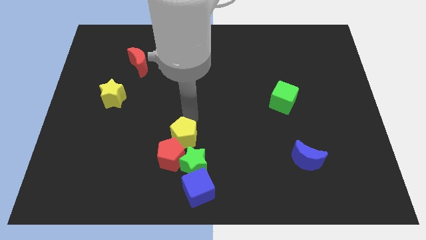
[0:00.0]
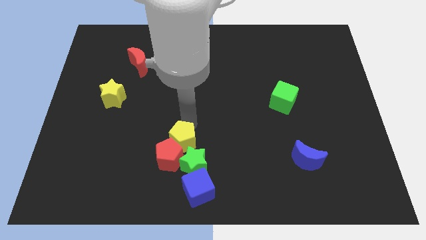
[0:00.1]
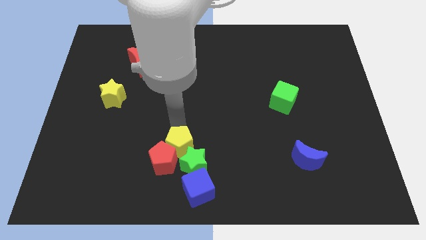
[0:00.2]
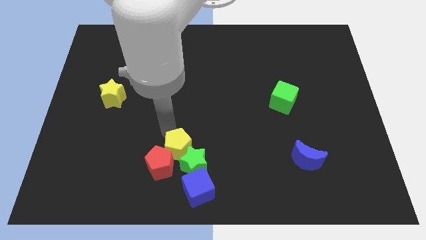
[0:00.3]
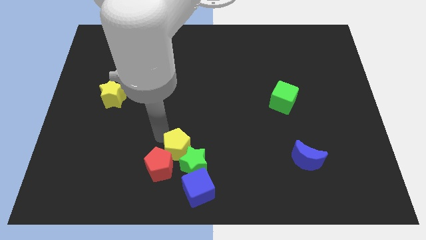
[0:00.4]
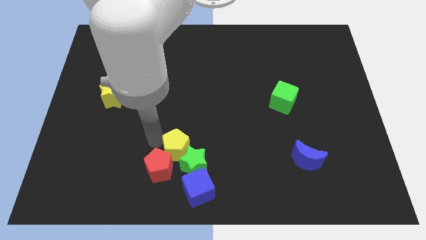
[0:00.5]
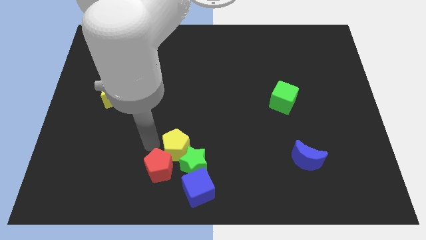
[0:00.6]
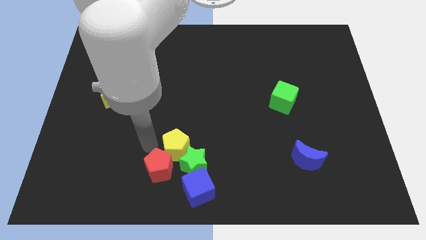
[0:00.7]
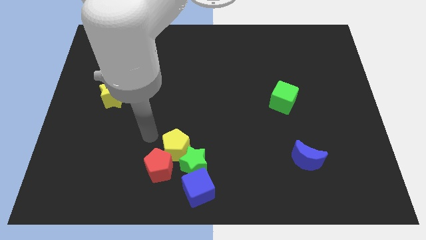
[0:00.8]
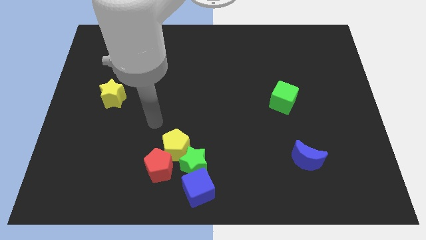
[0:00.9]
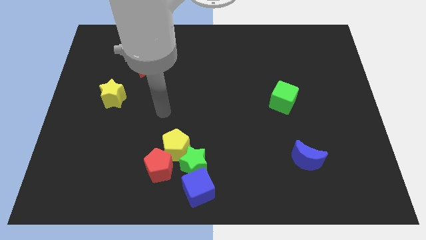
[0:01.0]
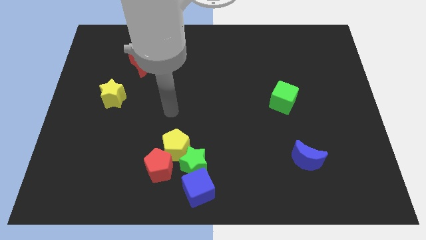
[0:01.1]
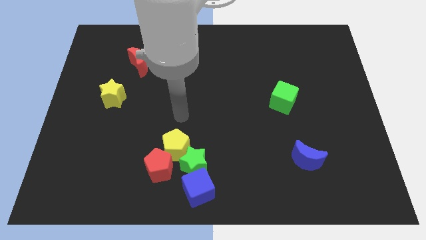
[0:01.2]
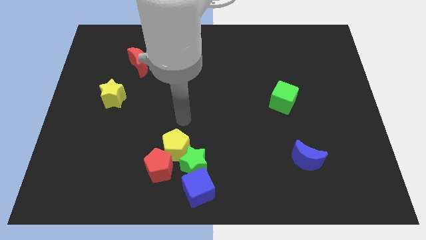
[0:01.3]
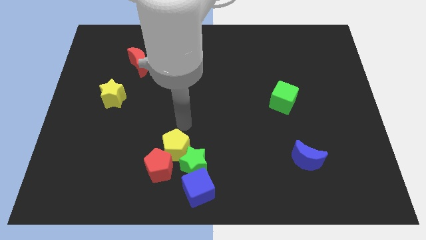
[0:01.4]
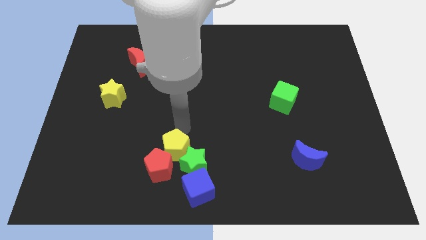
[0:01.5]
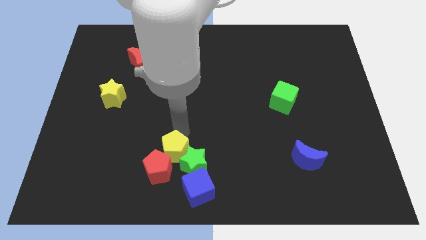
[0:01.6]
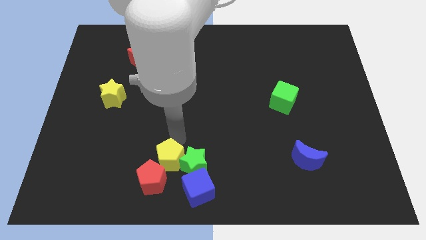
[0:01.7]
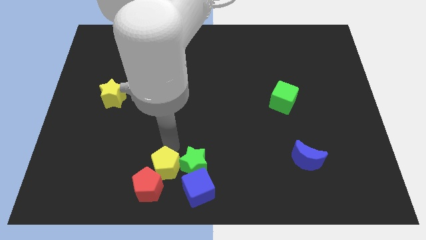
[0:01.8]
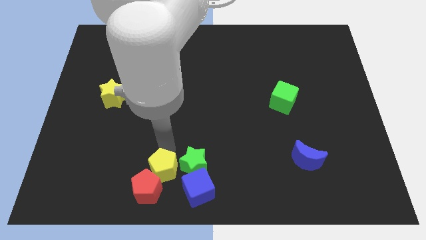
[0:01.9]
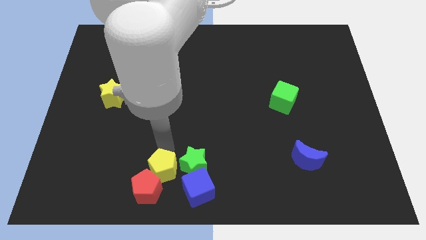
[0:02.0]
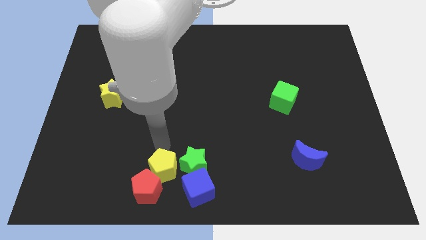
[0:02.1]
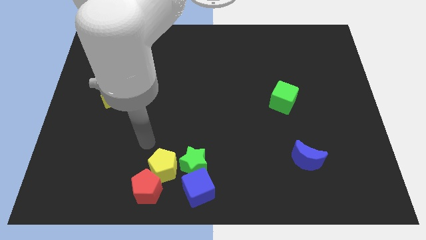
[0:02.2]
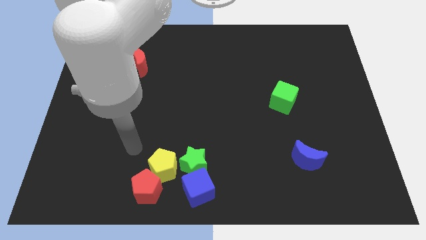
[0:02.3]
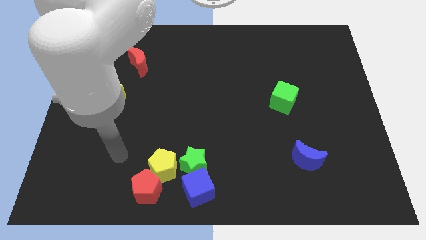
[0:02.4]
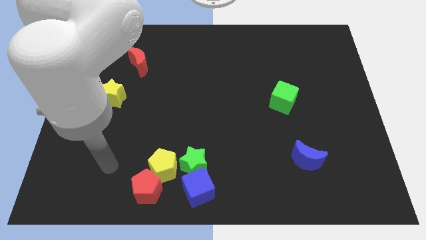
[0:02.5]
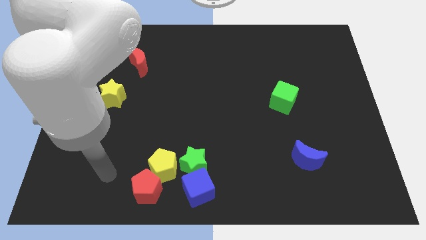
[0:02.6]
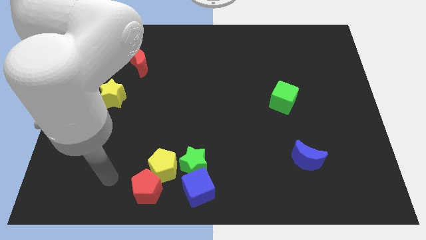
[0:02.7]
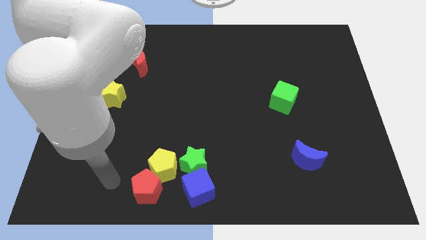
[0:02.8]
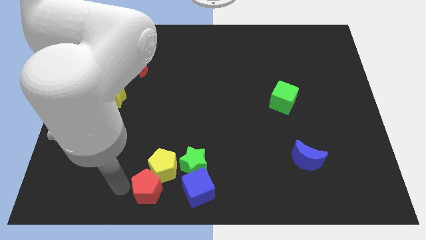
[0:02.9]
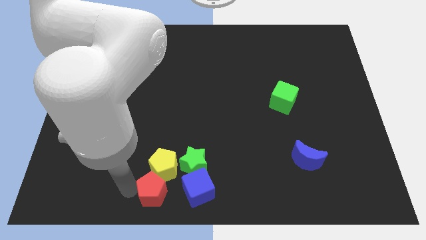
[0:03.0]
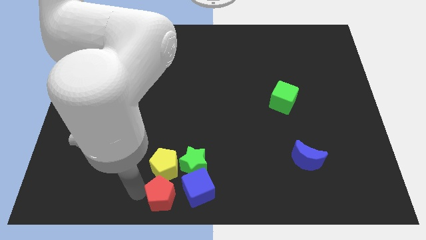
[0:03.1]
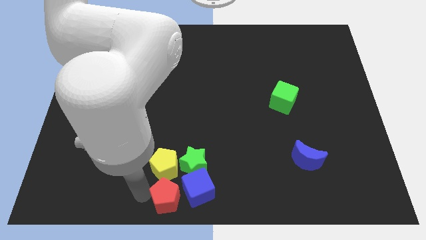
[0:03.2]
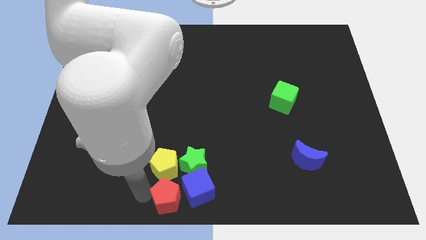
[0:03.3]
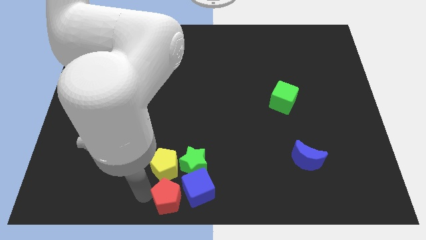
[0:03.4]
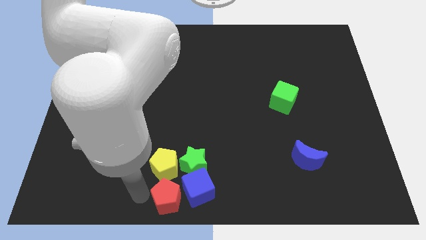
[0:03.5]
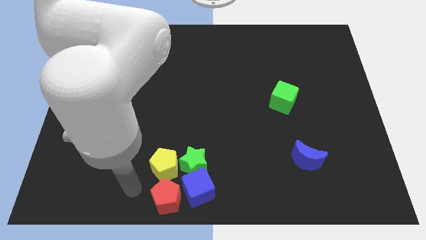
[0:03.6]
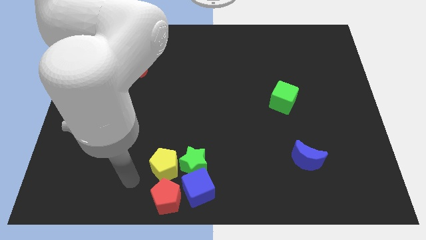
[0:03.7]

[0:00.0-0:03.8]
group up the yellow pentagongreen stared pentagon and blue cube at bottom center of the board

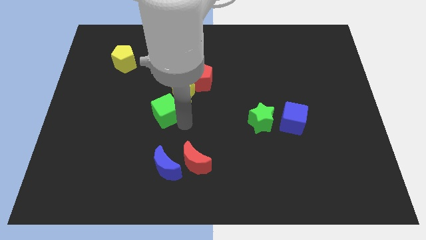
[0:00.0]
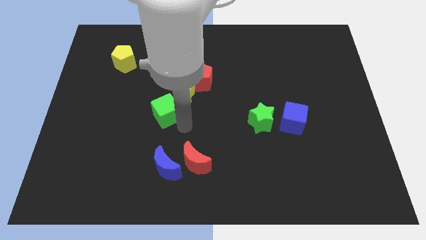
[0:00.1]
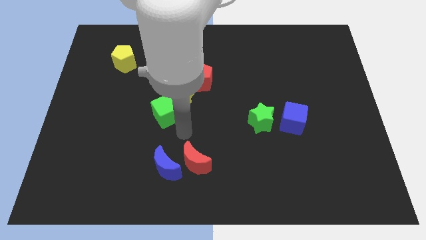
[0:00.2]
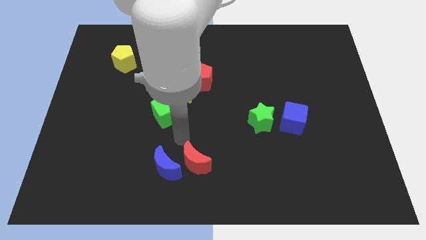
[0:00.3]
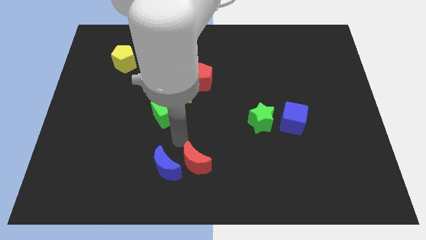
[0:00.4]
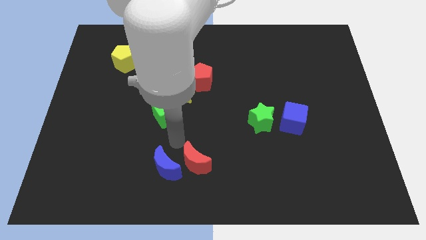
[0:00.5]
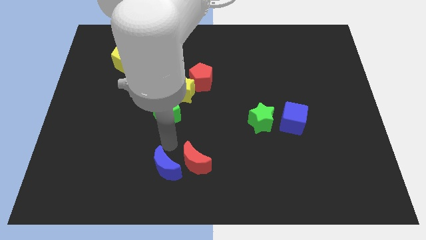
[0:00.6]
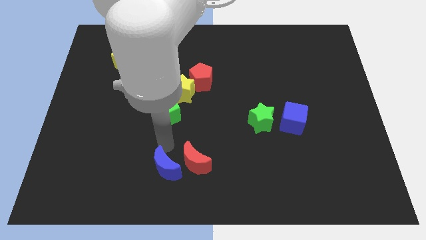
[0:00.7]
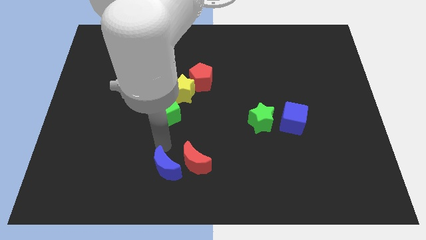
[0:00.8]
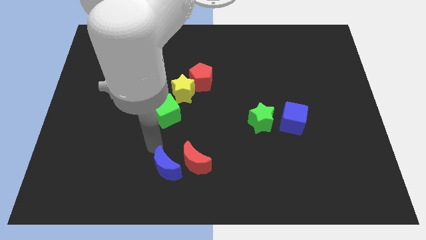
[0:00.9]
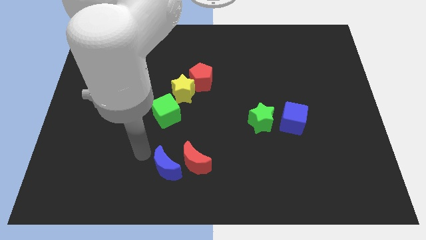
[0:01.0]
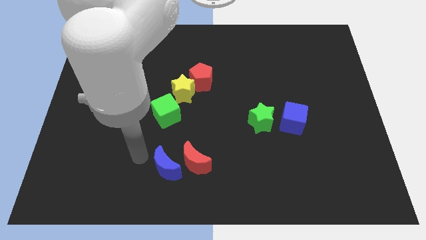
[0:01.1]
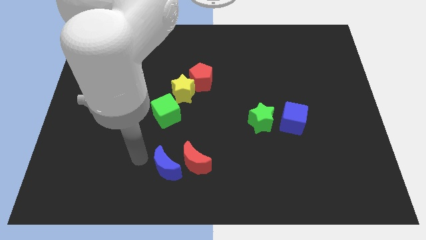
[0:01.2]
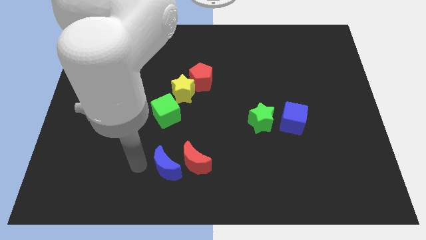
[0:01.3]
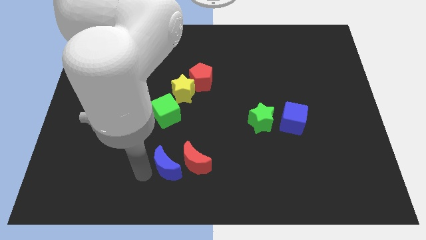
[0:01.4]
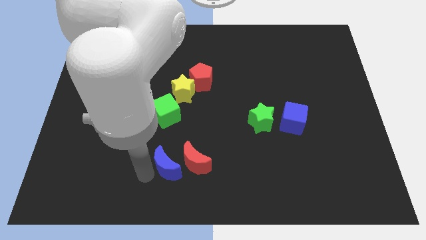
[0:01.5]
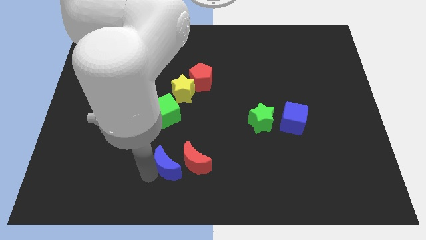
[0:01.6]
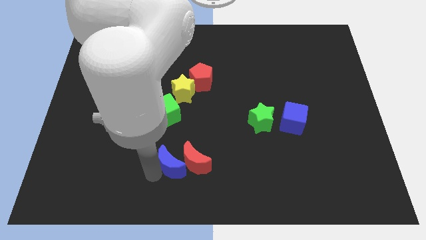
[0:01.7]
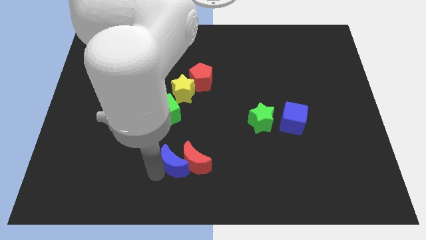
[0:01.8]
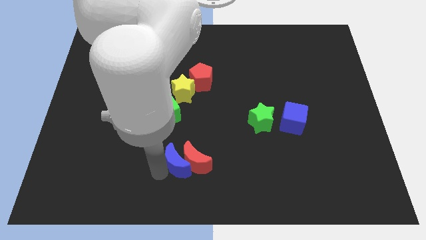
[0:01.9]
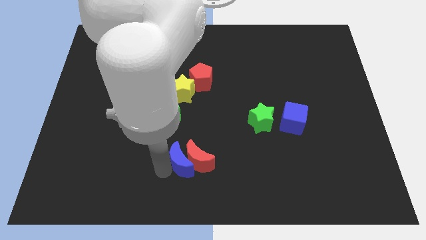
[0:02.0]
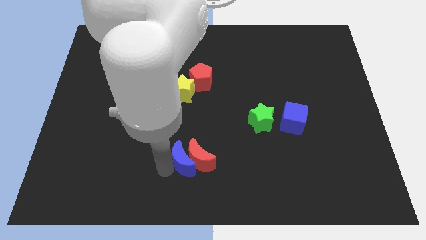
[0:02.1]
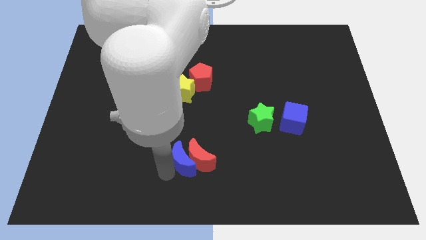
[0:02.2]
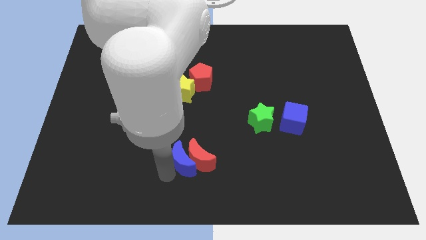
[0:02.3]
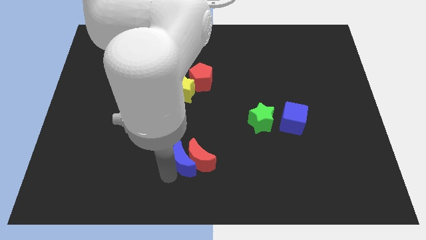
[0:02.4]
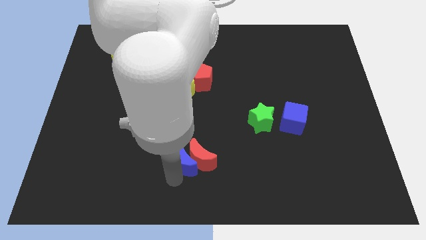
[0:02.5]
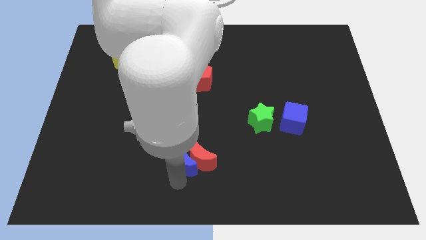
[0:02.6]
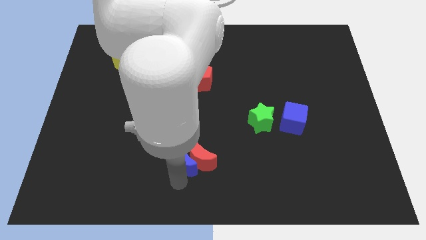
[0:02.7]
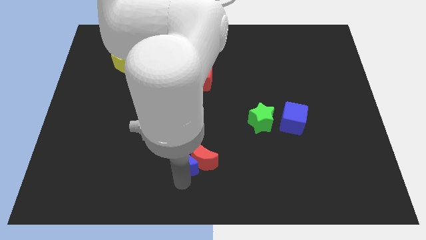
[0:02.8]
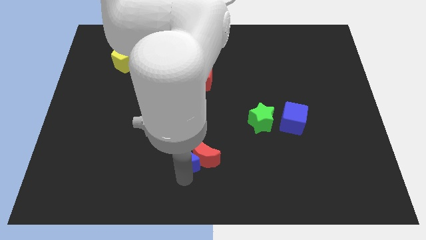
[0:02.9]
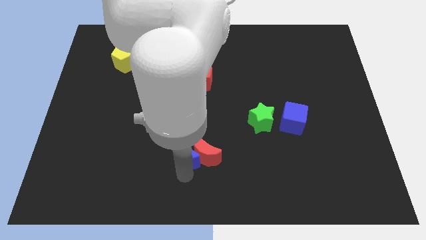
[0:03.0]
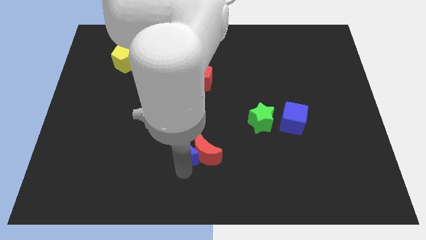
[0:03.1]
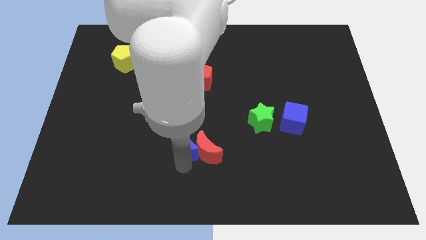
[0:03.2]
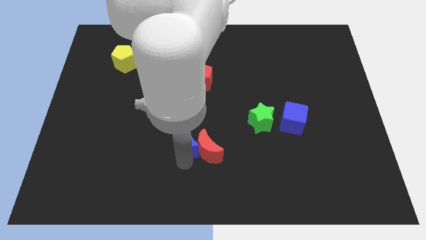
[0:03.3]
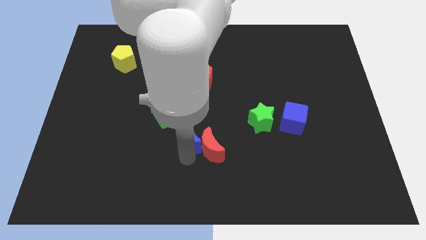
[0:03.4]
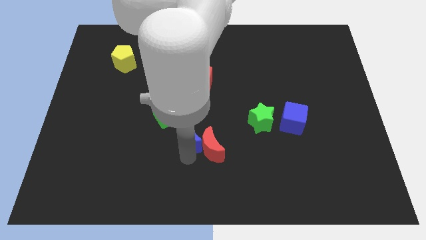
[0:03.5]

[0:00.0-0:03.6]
push the moons towards the center of the board

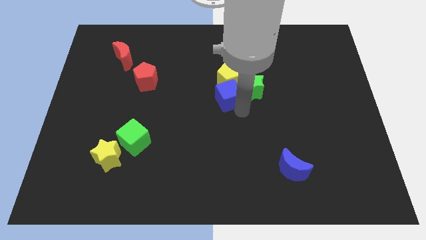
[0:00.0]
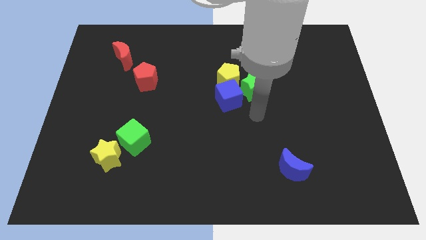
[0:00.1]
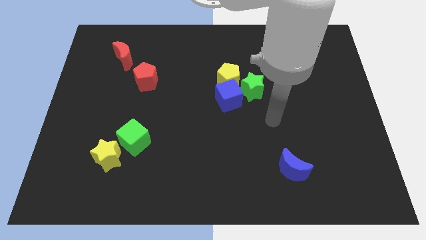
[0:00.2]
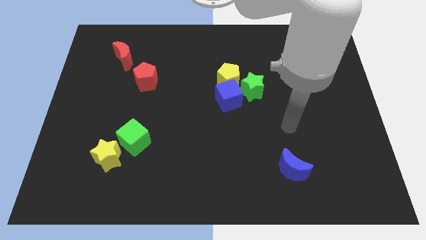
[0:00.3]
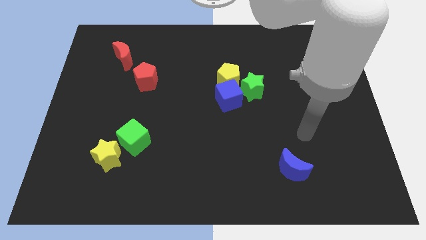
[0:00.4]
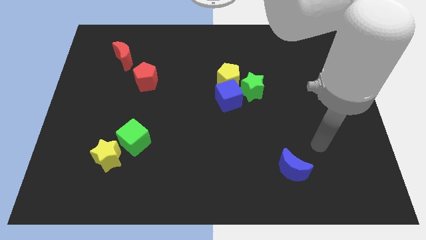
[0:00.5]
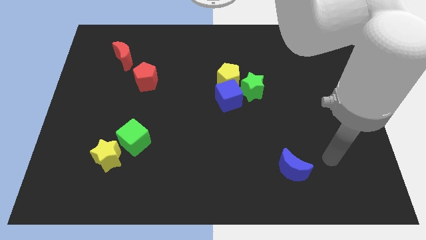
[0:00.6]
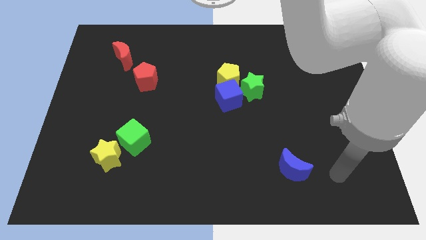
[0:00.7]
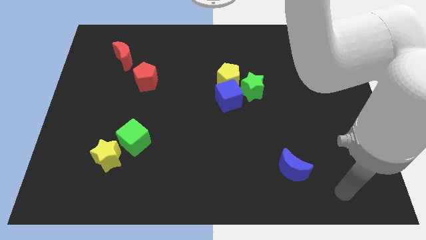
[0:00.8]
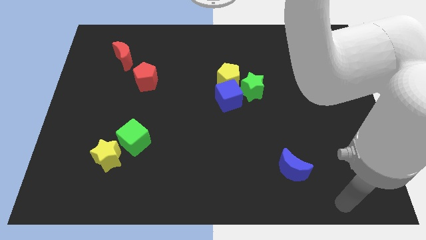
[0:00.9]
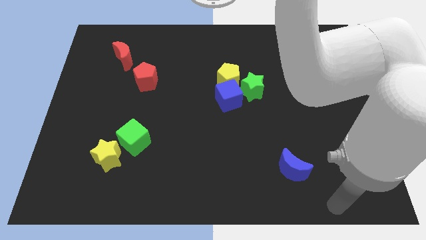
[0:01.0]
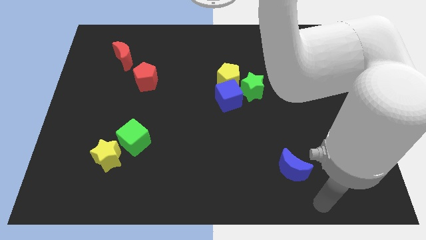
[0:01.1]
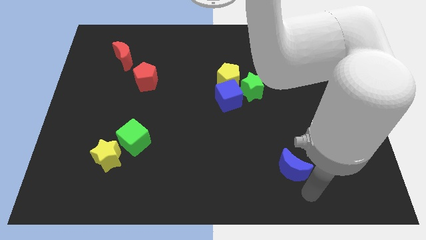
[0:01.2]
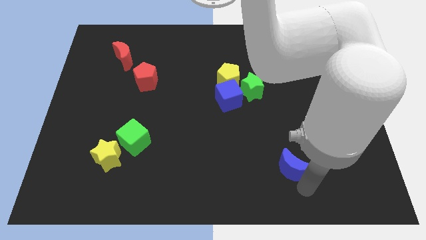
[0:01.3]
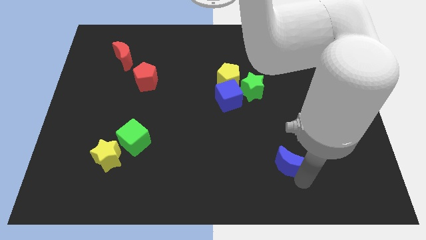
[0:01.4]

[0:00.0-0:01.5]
place your arm below the blue moon
